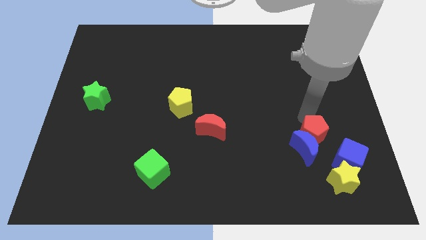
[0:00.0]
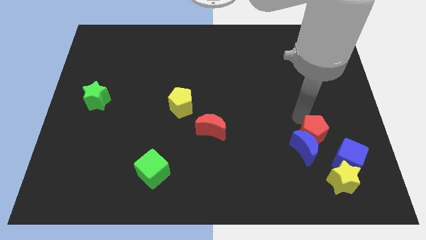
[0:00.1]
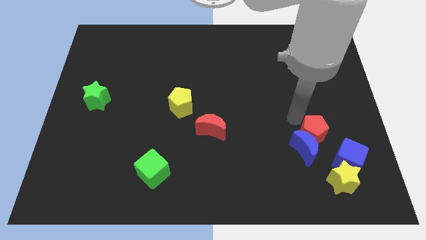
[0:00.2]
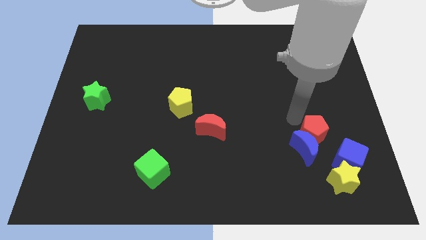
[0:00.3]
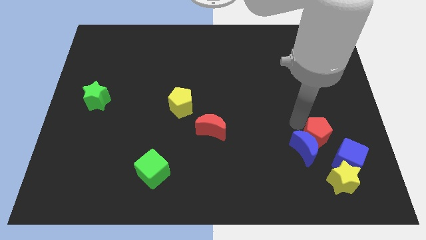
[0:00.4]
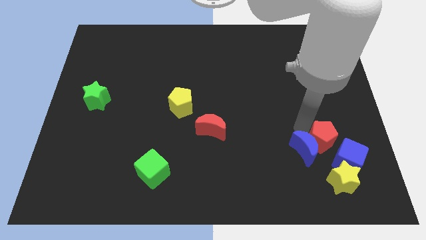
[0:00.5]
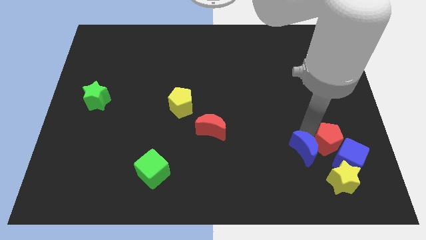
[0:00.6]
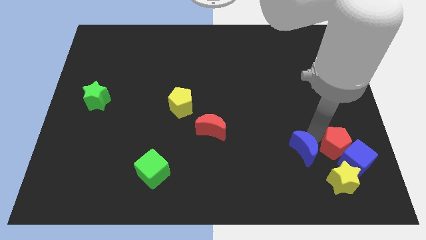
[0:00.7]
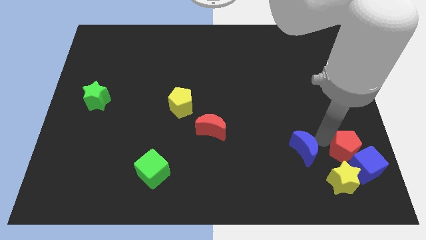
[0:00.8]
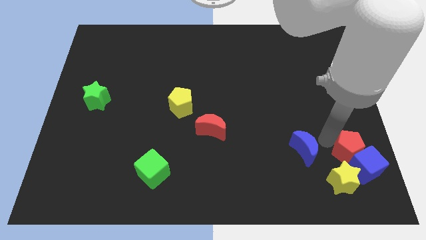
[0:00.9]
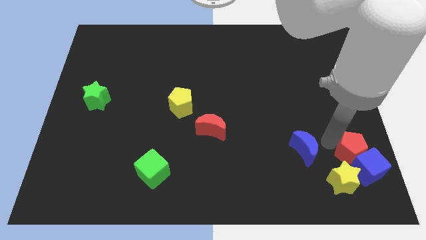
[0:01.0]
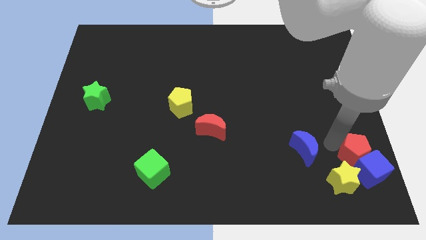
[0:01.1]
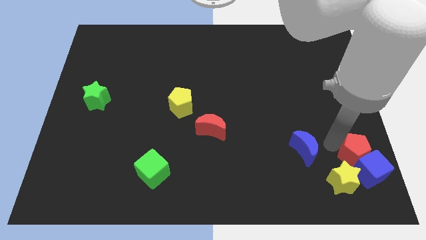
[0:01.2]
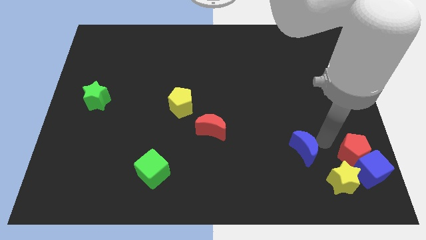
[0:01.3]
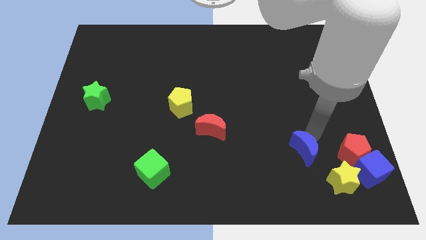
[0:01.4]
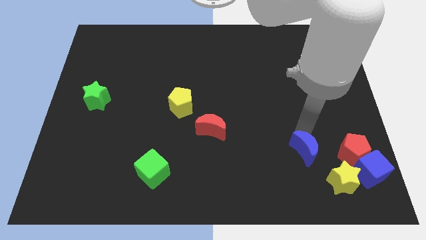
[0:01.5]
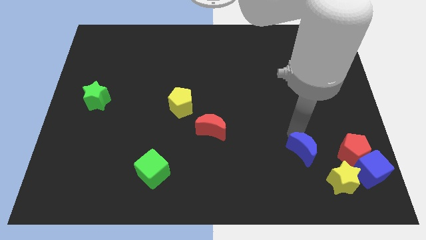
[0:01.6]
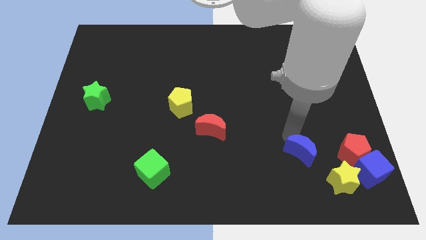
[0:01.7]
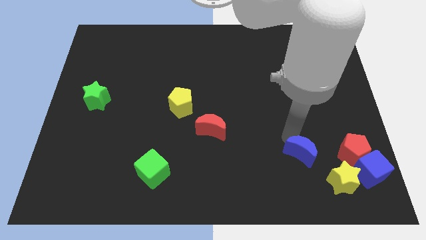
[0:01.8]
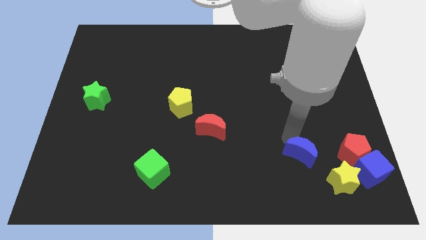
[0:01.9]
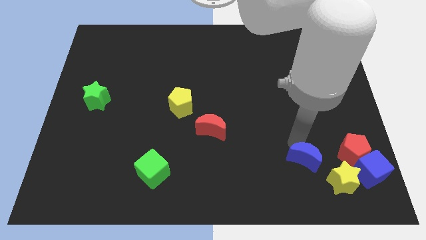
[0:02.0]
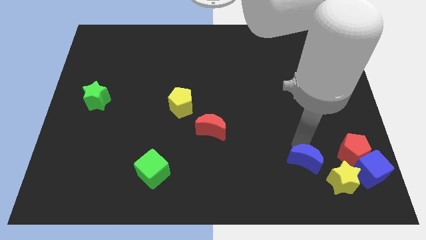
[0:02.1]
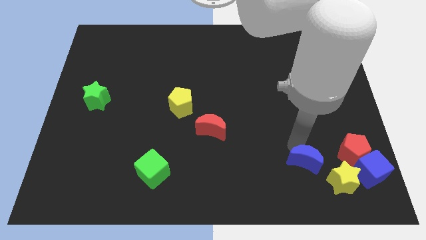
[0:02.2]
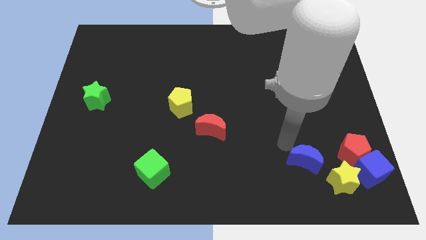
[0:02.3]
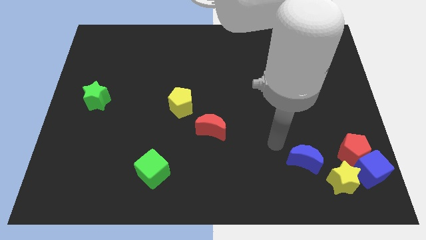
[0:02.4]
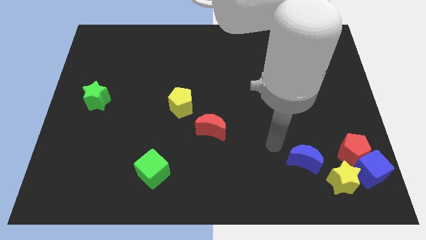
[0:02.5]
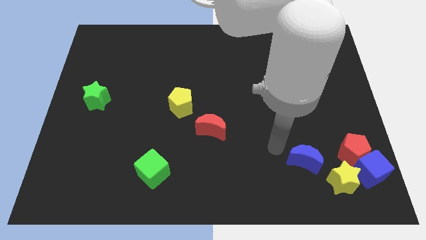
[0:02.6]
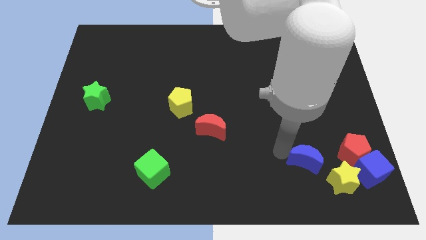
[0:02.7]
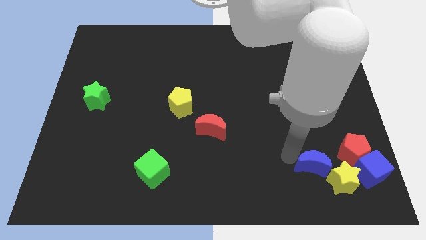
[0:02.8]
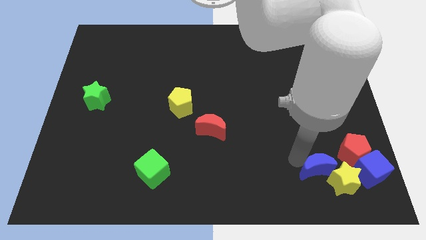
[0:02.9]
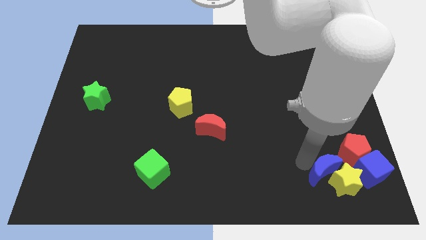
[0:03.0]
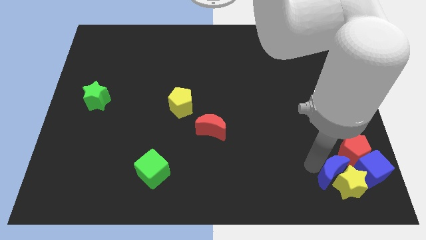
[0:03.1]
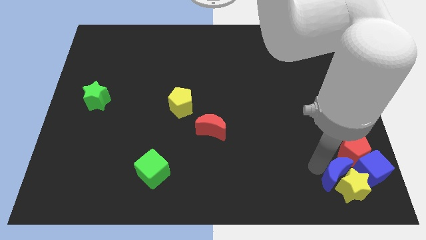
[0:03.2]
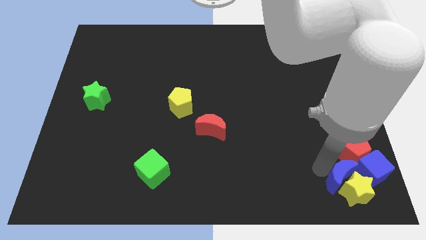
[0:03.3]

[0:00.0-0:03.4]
make a group of blue blocks red pentagon and yellow star

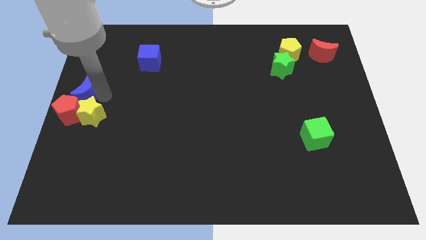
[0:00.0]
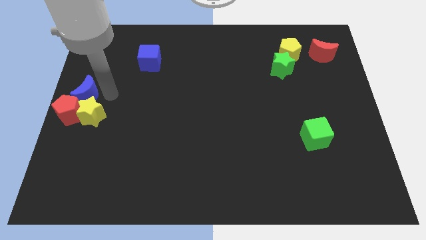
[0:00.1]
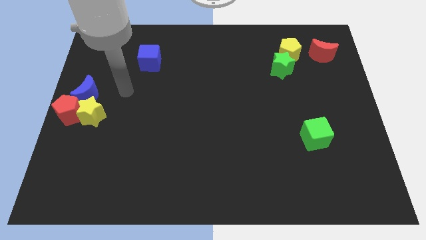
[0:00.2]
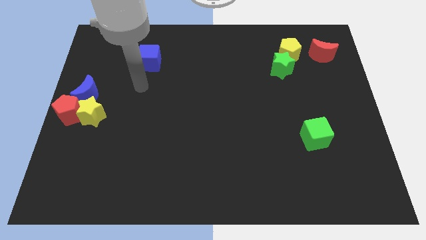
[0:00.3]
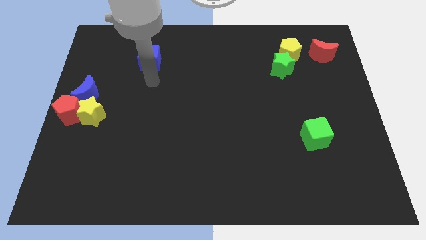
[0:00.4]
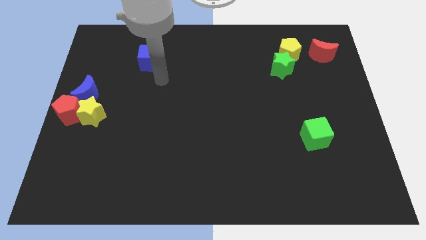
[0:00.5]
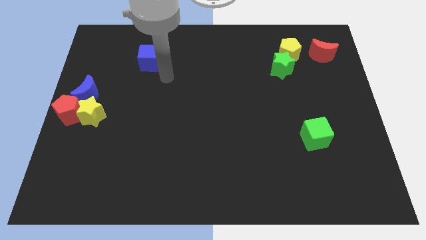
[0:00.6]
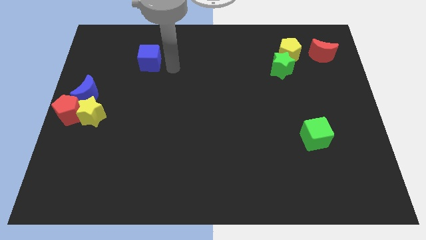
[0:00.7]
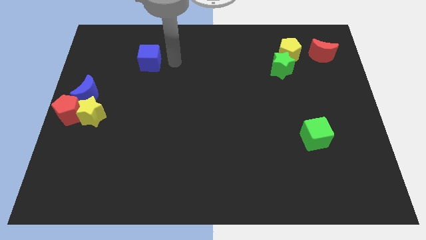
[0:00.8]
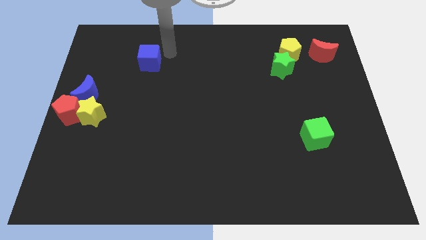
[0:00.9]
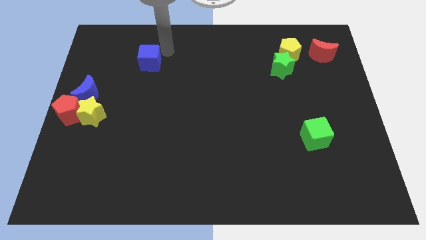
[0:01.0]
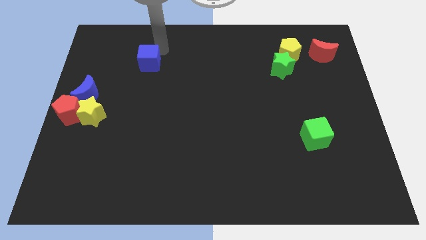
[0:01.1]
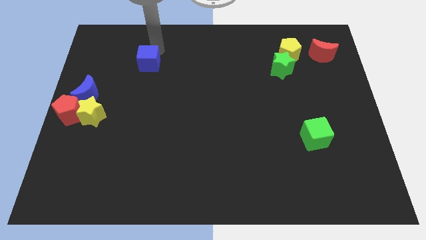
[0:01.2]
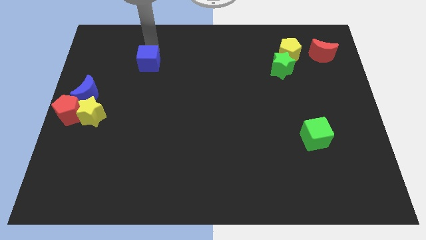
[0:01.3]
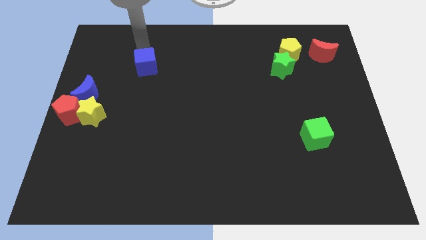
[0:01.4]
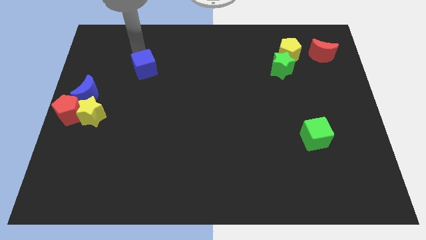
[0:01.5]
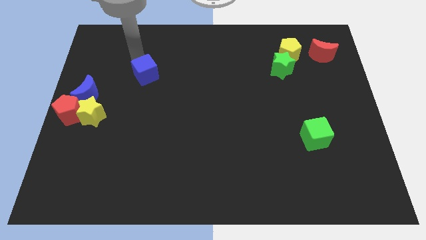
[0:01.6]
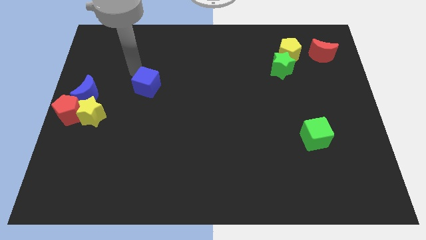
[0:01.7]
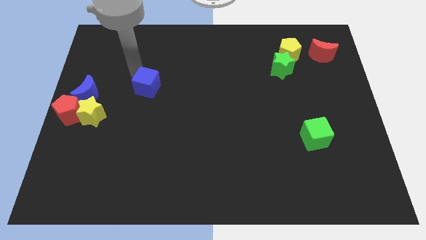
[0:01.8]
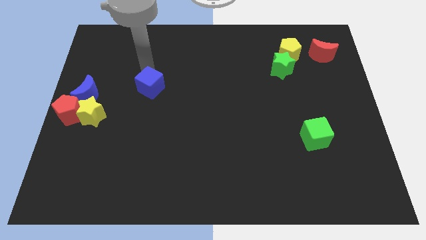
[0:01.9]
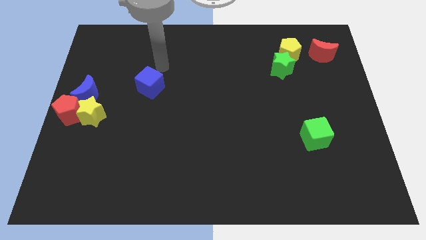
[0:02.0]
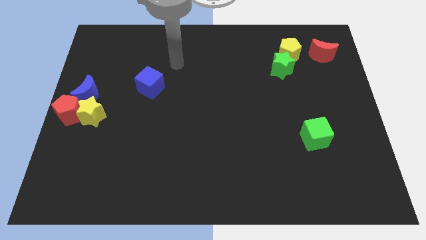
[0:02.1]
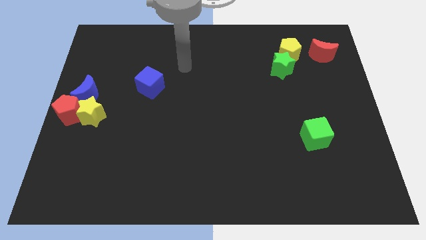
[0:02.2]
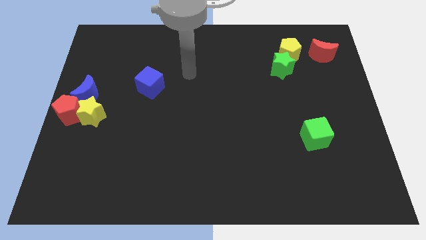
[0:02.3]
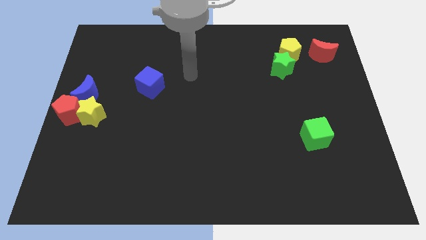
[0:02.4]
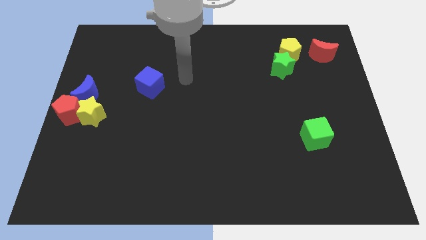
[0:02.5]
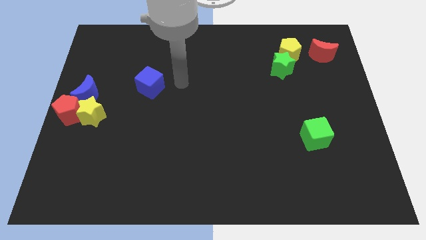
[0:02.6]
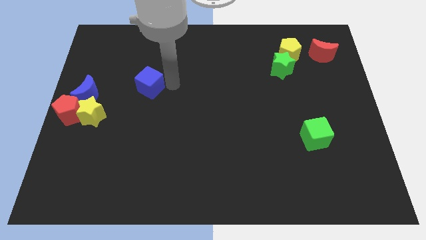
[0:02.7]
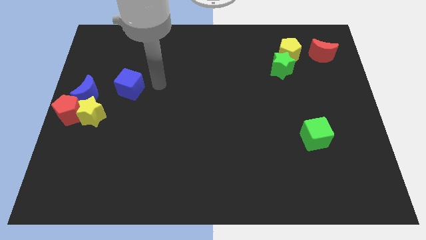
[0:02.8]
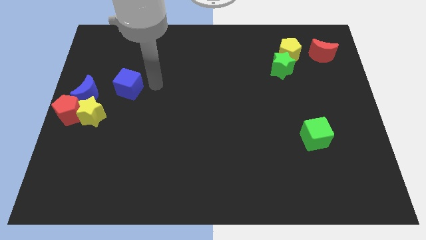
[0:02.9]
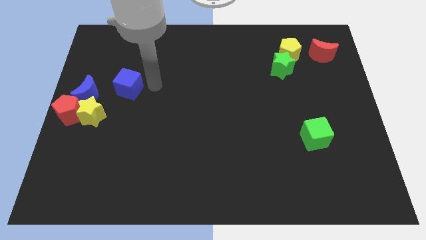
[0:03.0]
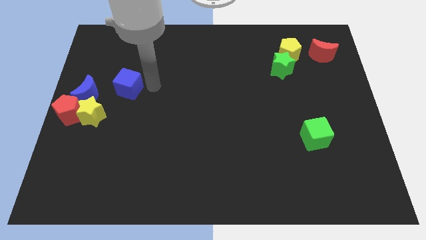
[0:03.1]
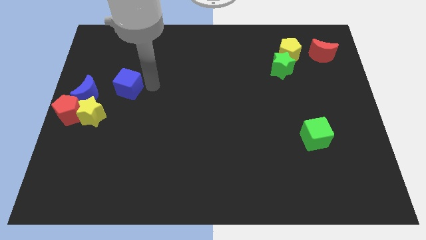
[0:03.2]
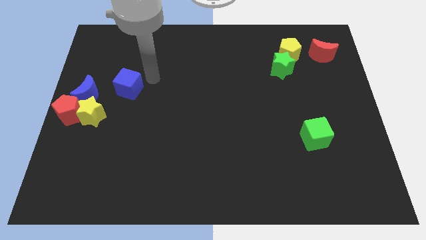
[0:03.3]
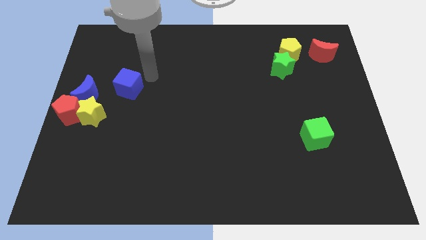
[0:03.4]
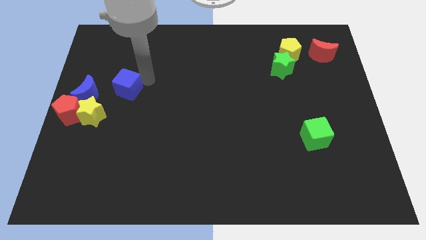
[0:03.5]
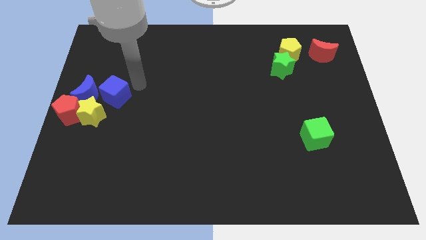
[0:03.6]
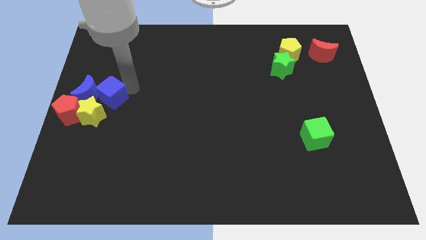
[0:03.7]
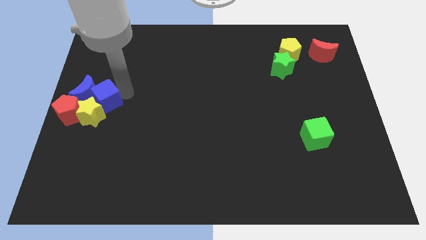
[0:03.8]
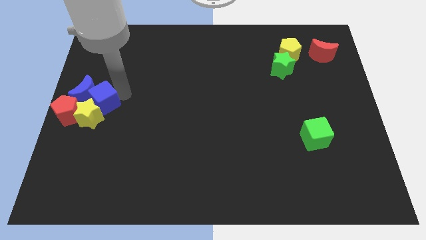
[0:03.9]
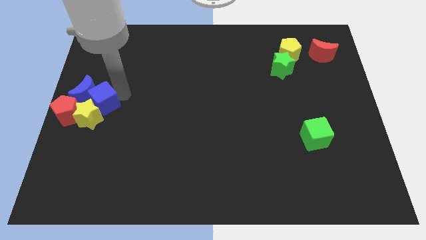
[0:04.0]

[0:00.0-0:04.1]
move the blue cube into the group of blocks

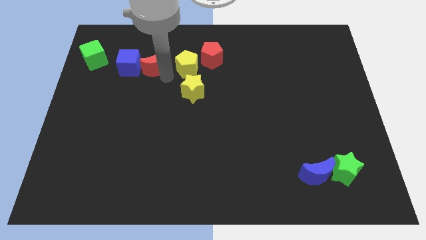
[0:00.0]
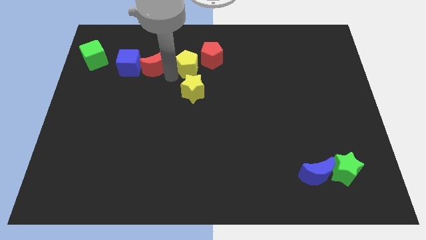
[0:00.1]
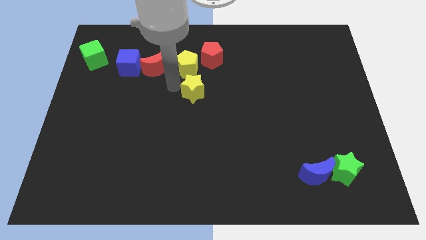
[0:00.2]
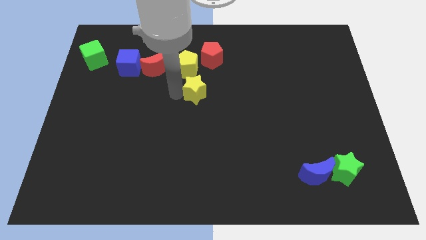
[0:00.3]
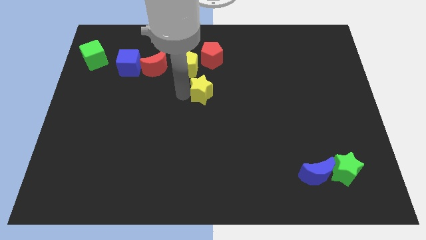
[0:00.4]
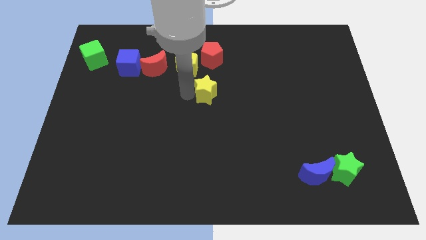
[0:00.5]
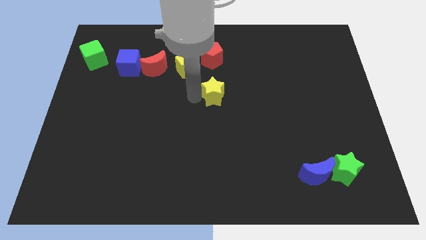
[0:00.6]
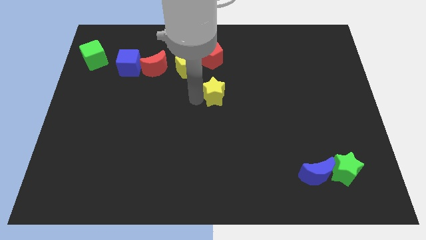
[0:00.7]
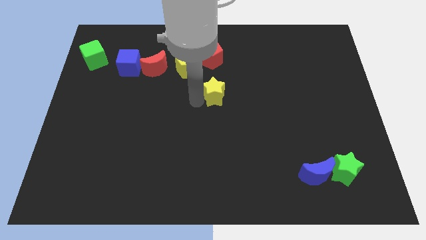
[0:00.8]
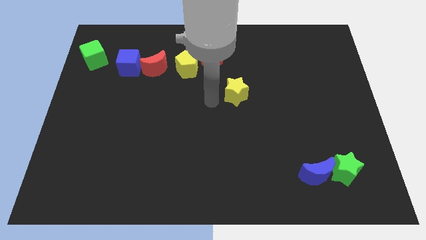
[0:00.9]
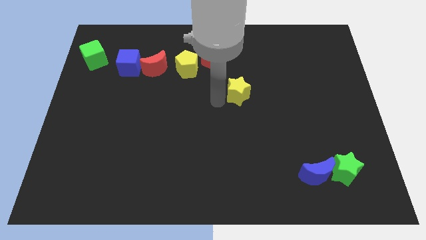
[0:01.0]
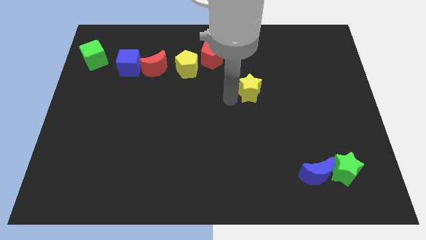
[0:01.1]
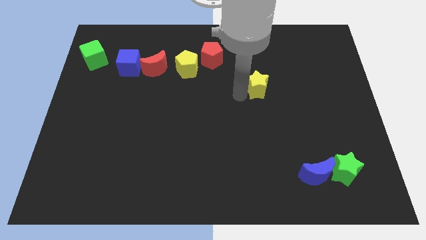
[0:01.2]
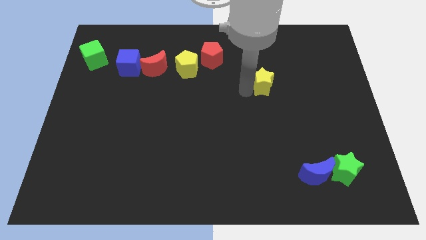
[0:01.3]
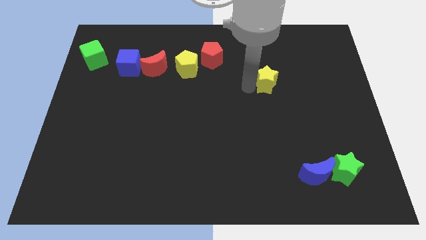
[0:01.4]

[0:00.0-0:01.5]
push the yellow star towards the right side of the board
